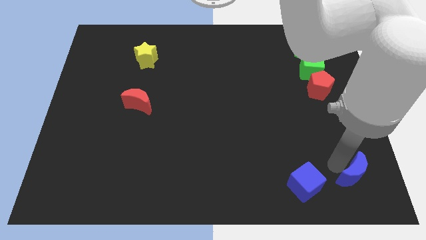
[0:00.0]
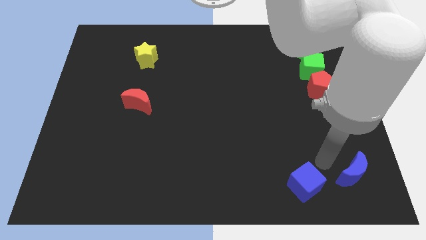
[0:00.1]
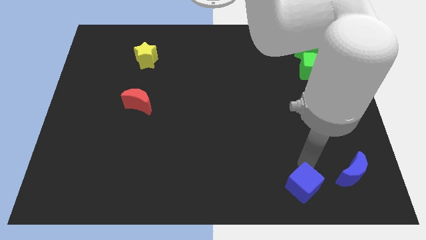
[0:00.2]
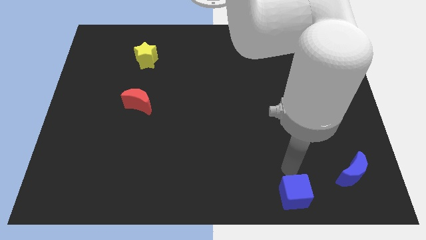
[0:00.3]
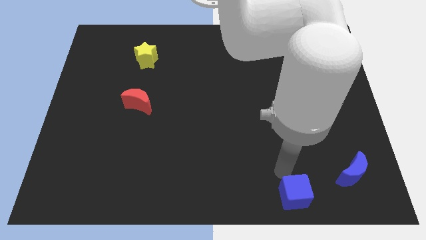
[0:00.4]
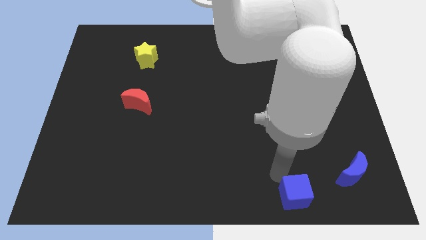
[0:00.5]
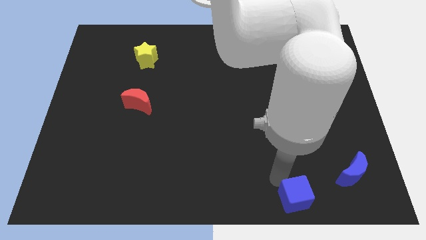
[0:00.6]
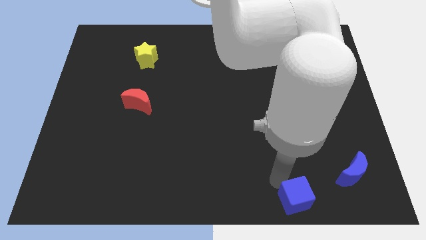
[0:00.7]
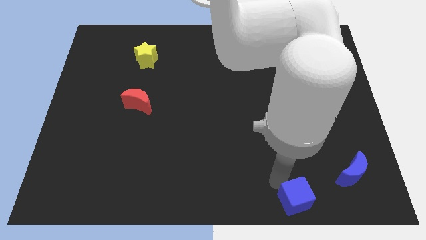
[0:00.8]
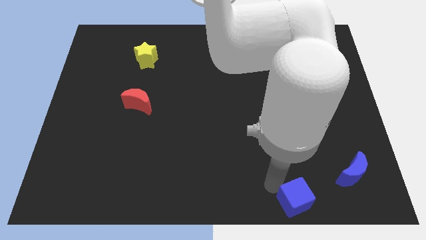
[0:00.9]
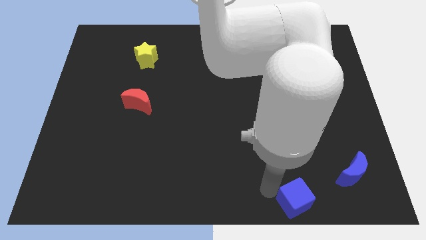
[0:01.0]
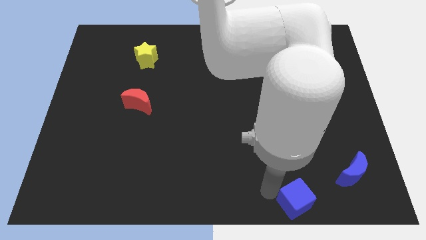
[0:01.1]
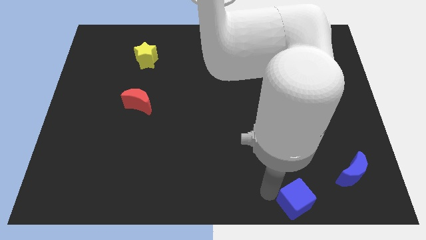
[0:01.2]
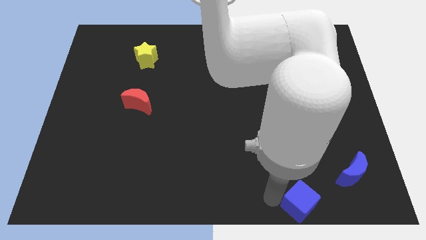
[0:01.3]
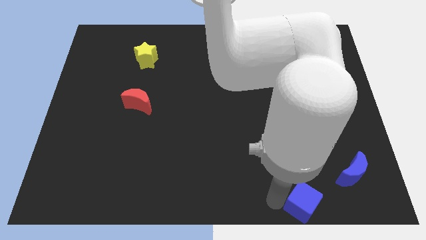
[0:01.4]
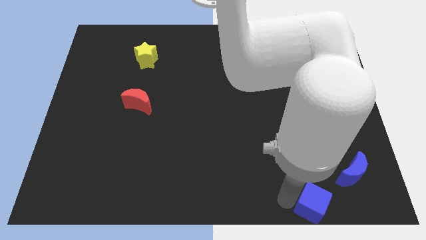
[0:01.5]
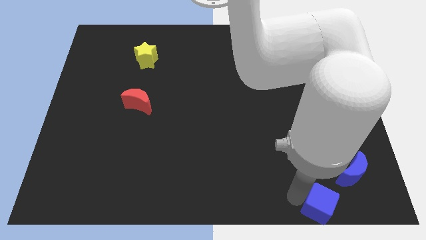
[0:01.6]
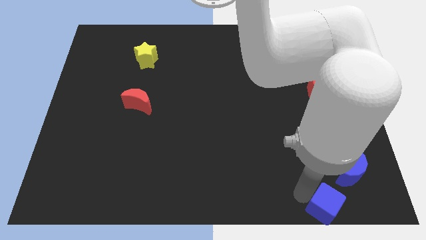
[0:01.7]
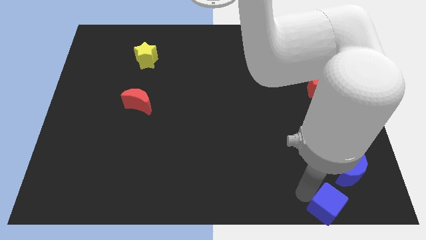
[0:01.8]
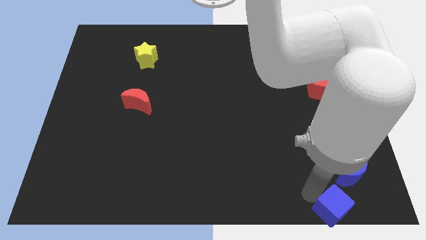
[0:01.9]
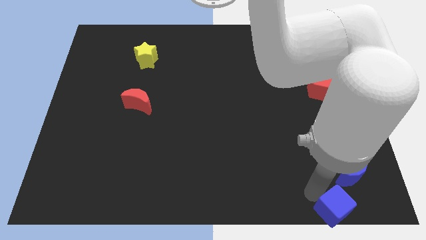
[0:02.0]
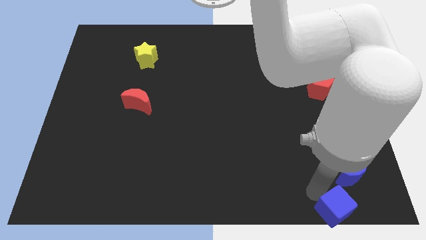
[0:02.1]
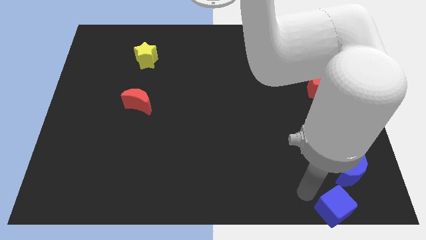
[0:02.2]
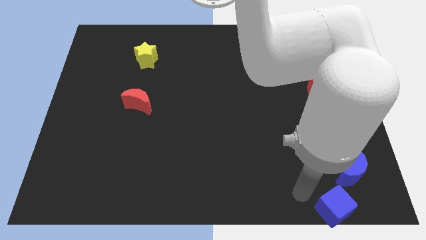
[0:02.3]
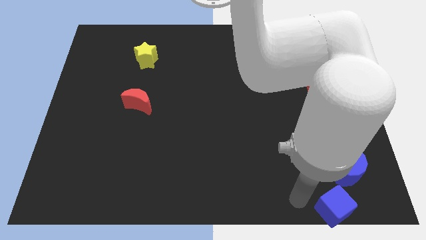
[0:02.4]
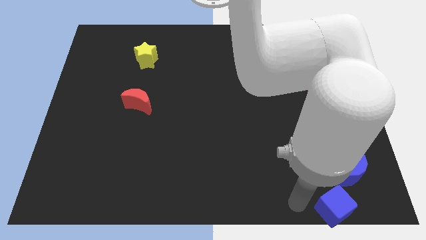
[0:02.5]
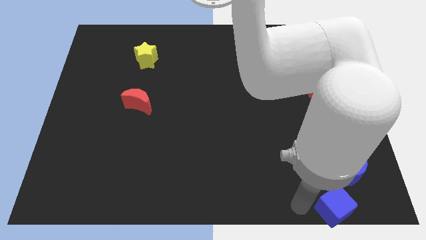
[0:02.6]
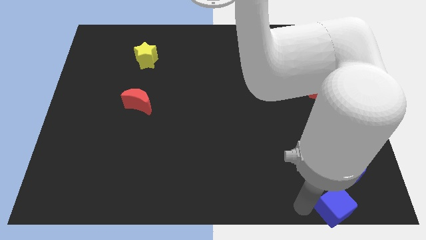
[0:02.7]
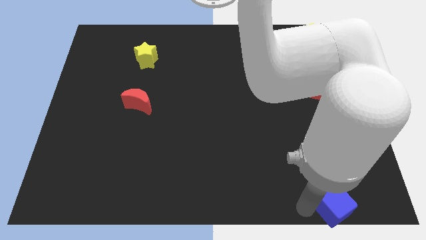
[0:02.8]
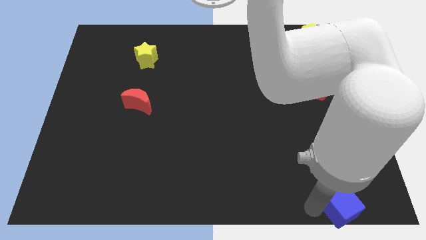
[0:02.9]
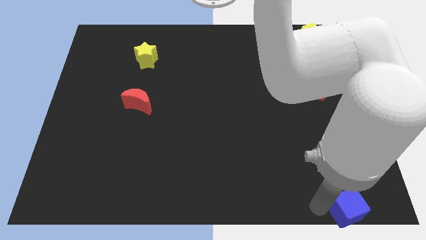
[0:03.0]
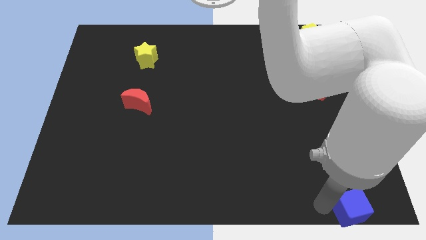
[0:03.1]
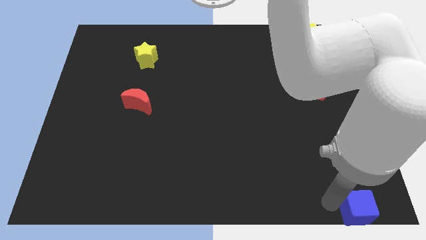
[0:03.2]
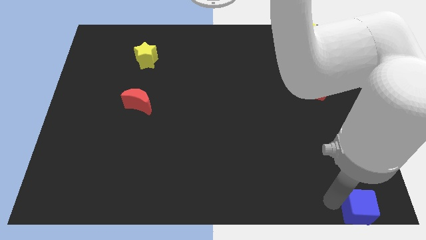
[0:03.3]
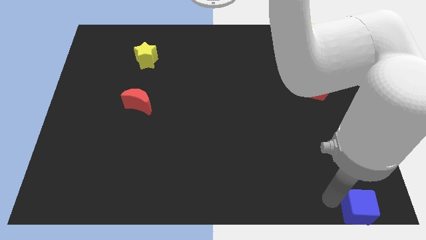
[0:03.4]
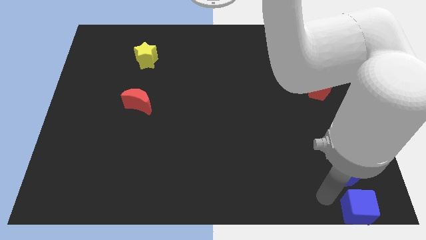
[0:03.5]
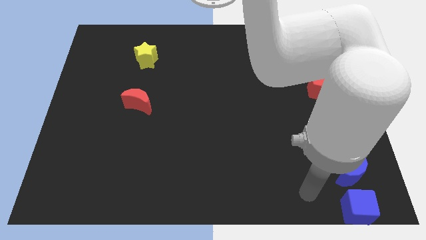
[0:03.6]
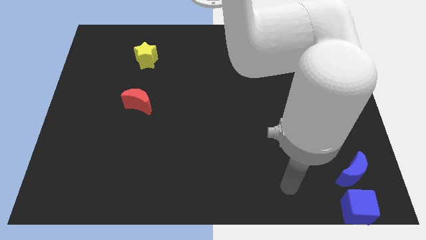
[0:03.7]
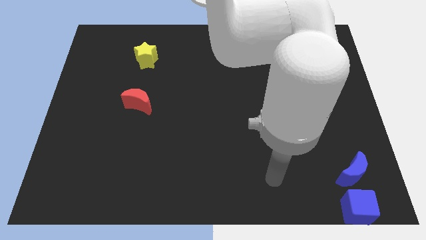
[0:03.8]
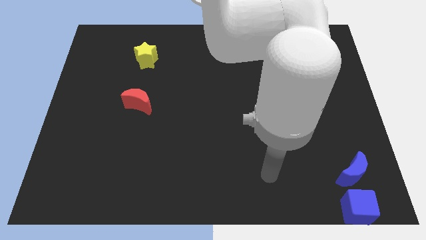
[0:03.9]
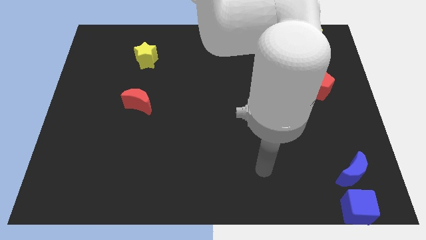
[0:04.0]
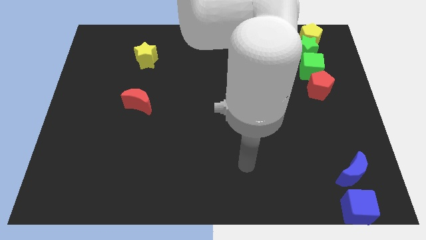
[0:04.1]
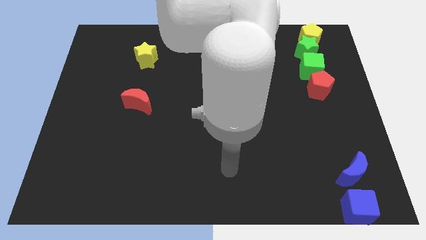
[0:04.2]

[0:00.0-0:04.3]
push the blue cube towards the bottom left of the board

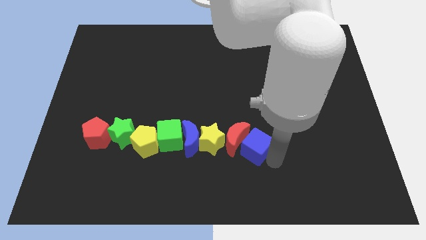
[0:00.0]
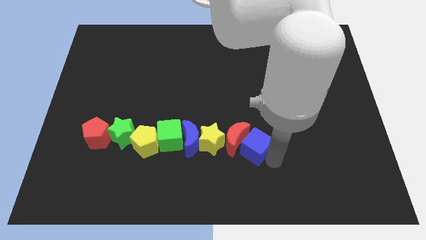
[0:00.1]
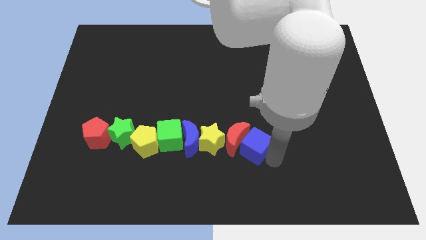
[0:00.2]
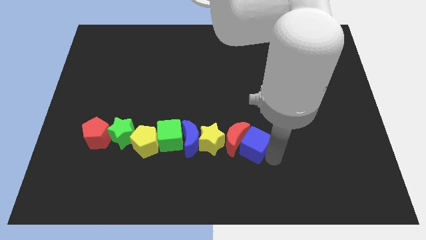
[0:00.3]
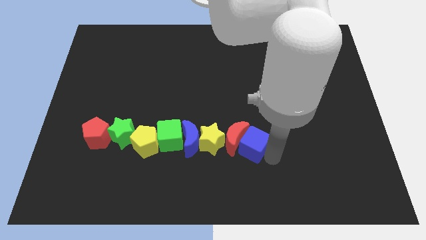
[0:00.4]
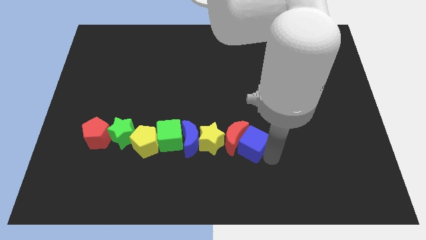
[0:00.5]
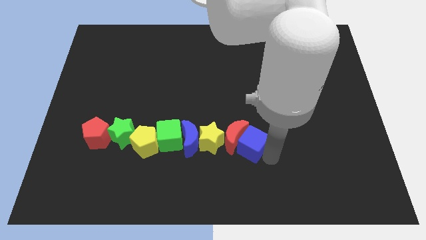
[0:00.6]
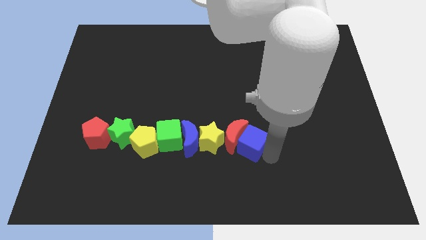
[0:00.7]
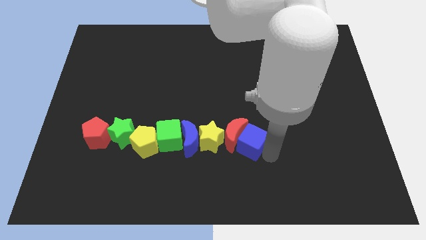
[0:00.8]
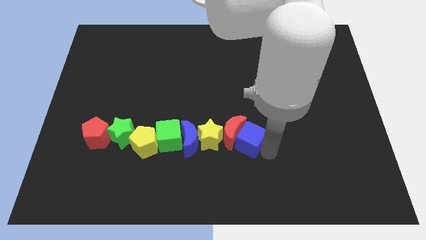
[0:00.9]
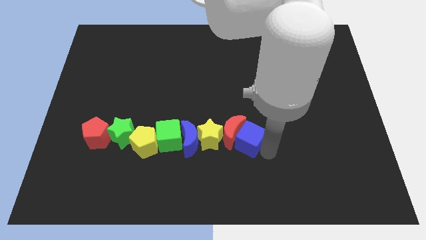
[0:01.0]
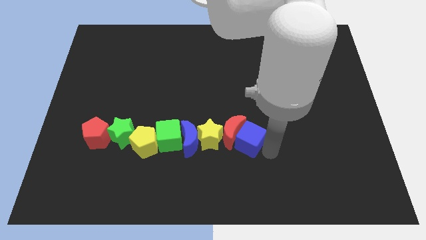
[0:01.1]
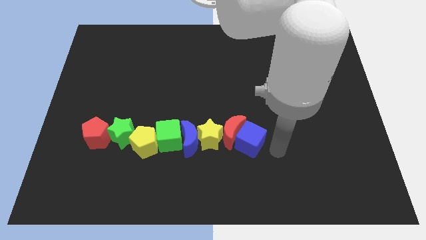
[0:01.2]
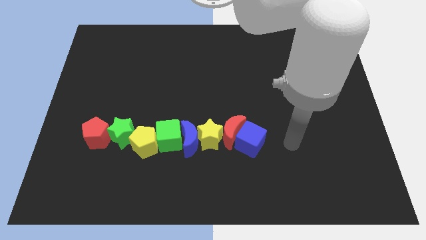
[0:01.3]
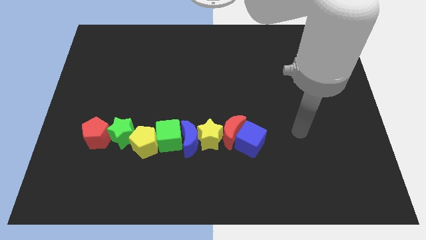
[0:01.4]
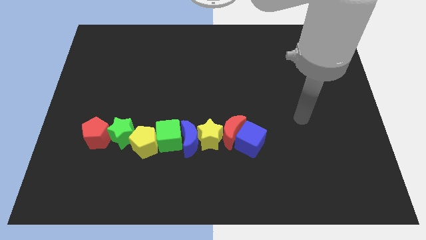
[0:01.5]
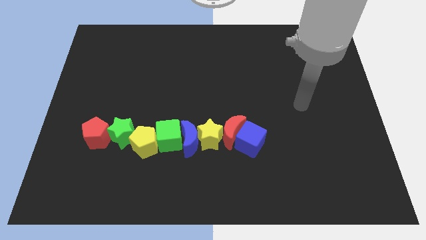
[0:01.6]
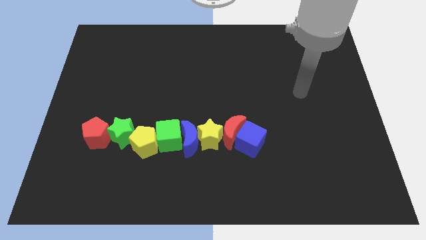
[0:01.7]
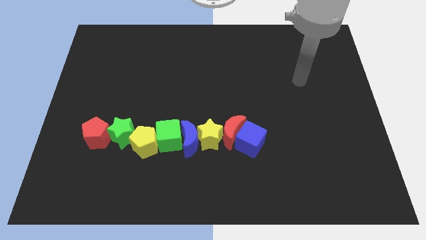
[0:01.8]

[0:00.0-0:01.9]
push the blue cube into the red moon

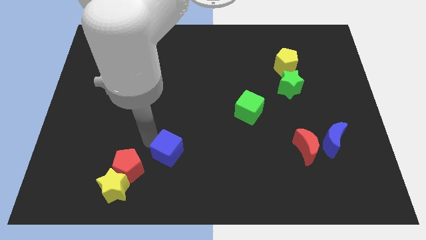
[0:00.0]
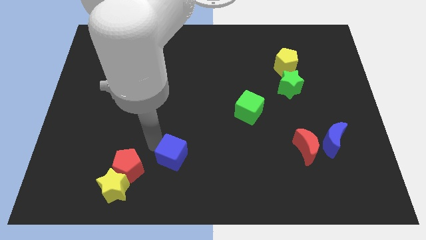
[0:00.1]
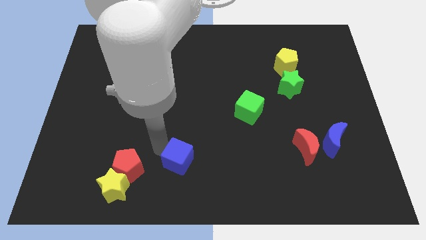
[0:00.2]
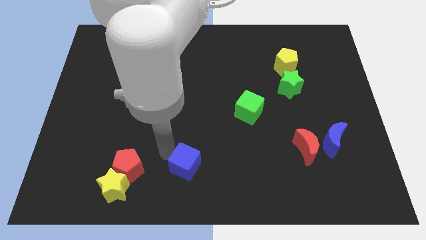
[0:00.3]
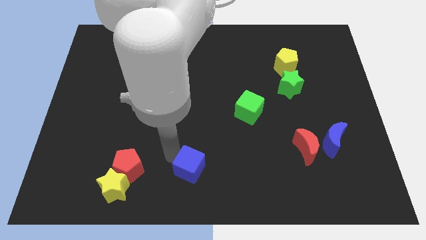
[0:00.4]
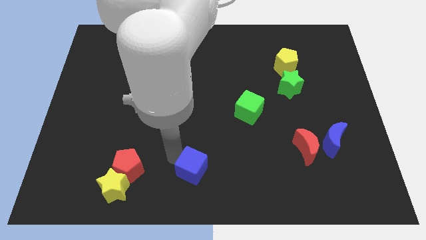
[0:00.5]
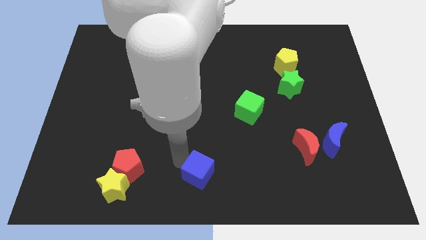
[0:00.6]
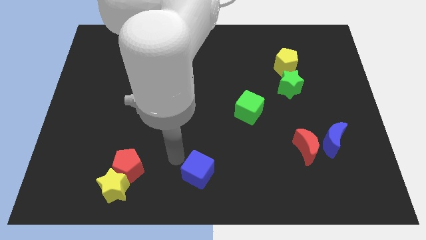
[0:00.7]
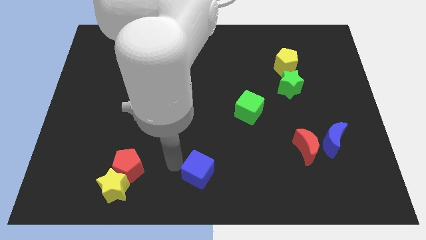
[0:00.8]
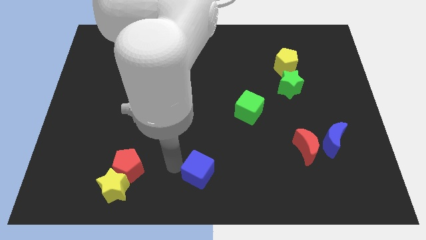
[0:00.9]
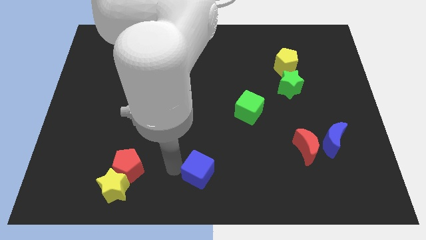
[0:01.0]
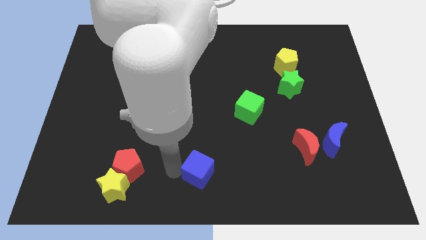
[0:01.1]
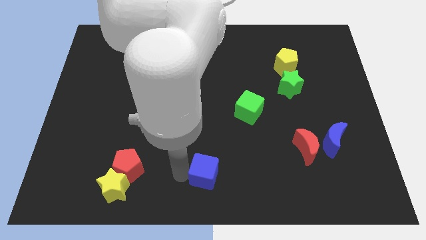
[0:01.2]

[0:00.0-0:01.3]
push the blue cube near the bottom center of the board

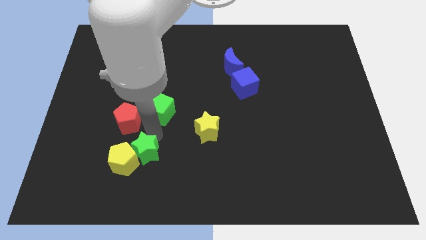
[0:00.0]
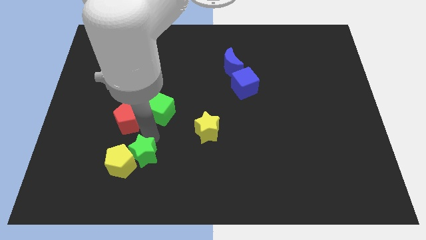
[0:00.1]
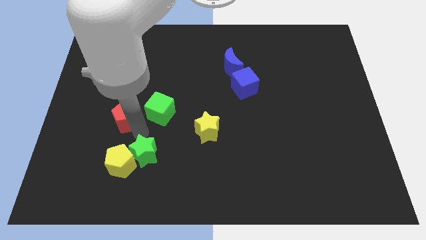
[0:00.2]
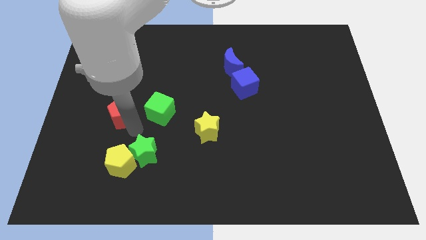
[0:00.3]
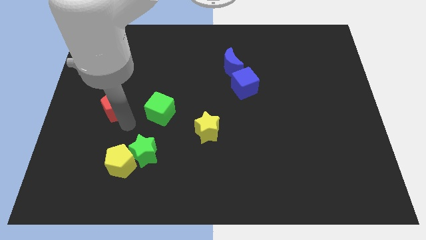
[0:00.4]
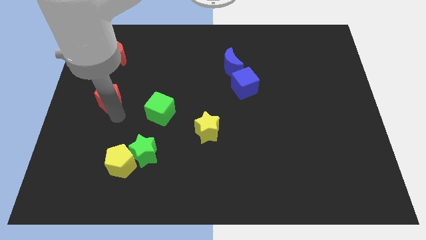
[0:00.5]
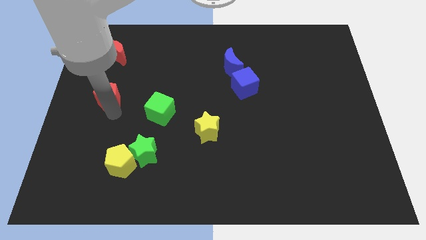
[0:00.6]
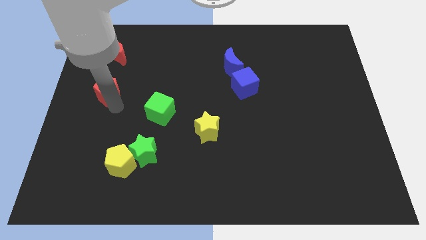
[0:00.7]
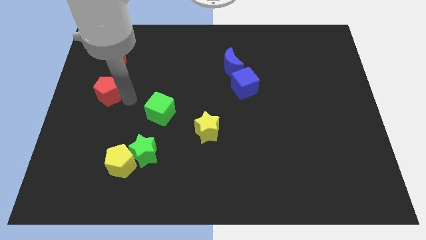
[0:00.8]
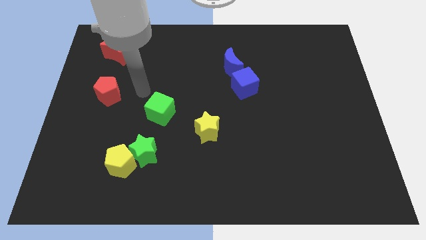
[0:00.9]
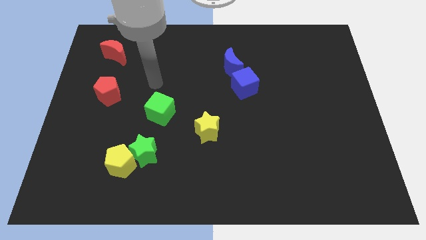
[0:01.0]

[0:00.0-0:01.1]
move the red pentagon to the bottom of the red crescent

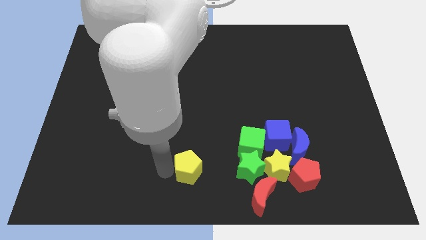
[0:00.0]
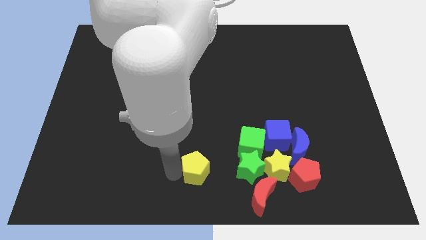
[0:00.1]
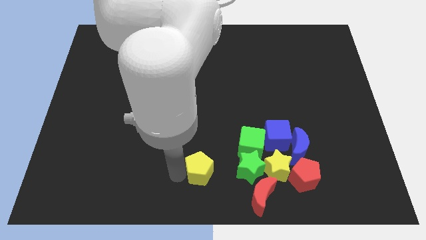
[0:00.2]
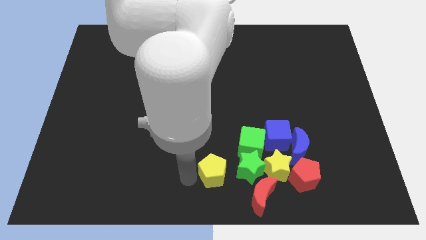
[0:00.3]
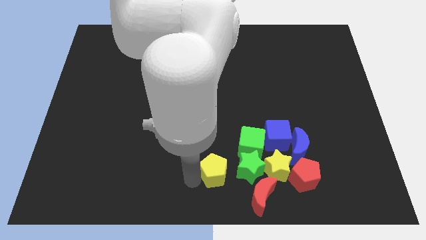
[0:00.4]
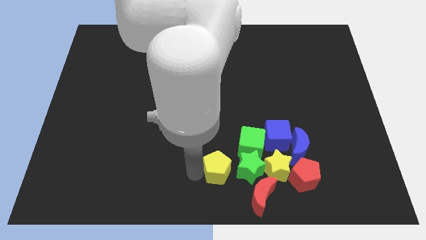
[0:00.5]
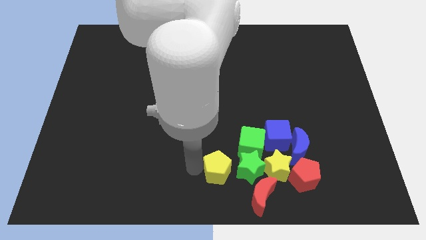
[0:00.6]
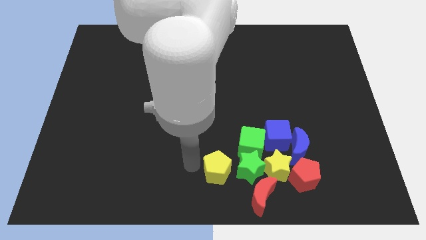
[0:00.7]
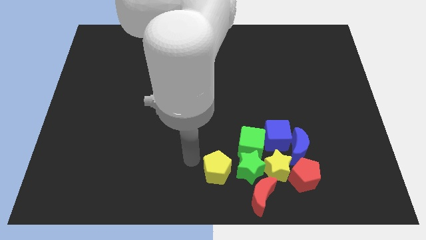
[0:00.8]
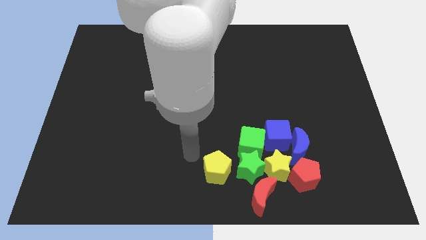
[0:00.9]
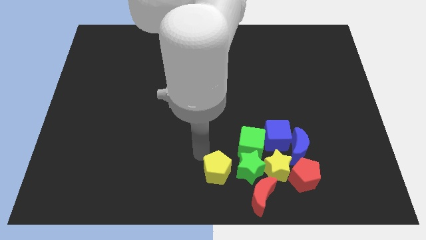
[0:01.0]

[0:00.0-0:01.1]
place the yellow pentagon left to the green star
